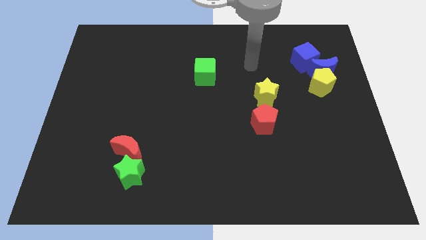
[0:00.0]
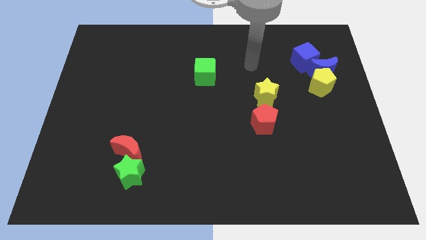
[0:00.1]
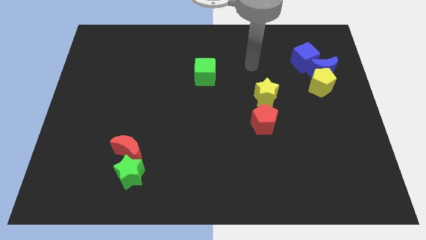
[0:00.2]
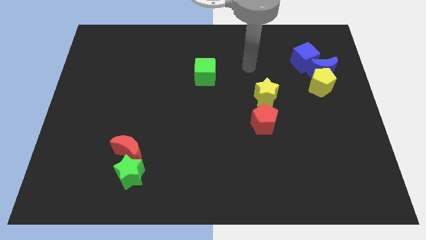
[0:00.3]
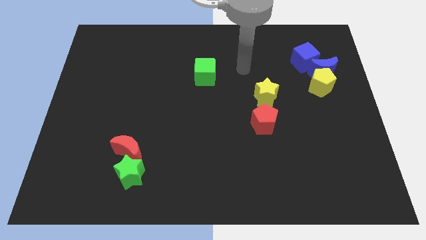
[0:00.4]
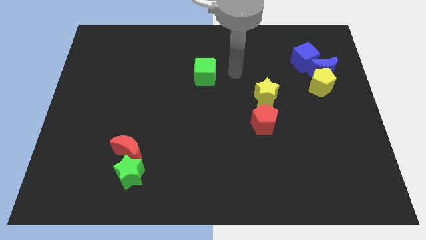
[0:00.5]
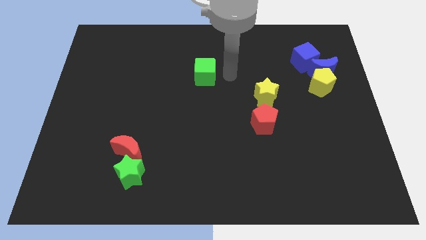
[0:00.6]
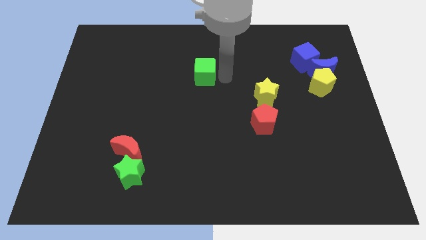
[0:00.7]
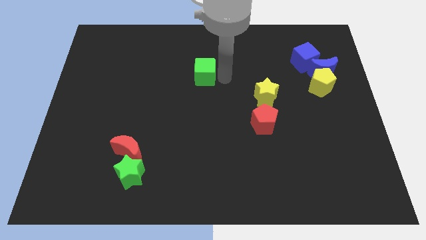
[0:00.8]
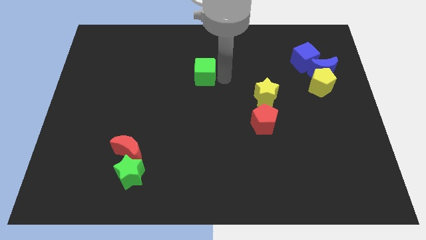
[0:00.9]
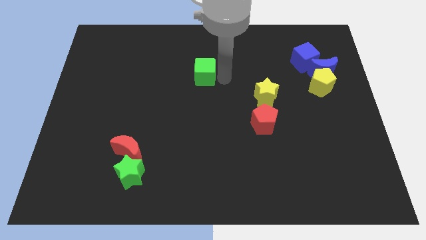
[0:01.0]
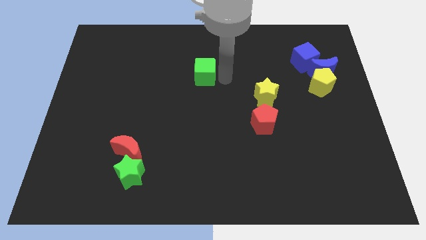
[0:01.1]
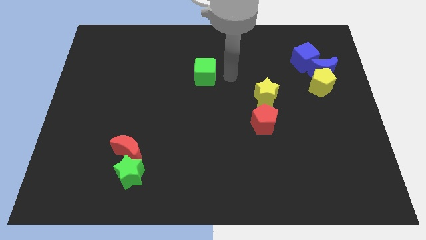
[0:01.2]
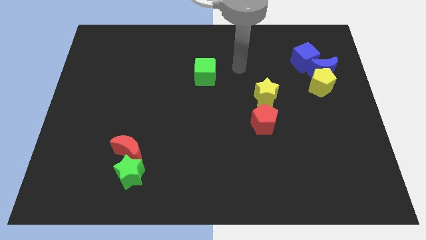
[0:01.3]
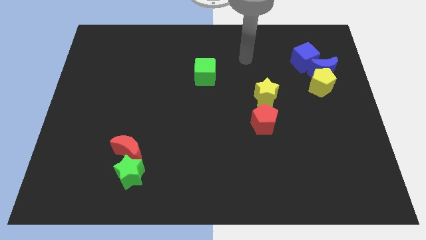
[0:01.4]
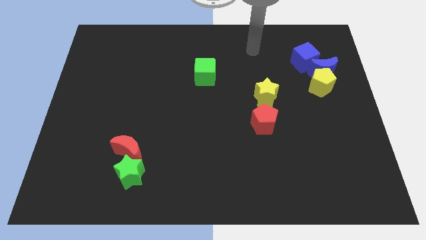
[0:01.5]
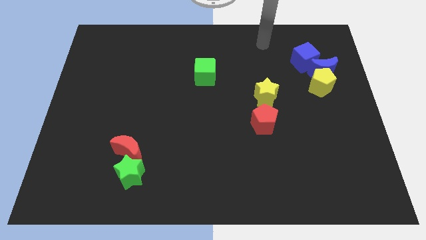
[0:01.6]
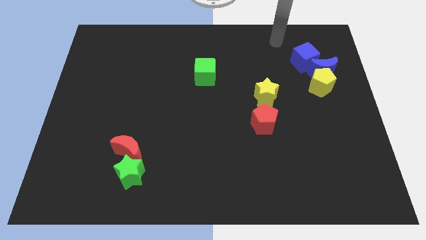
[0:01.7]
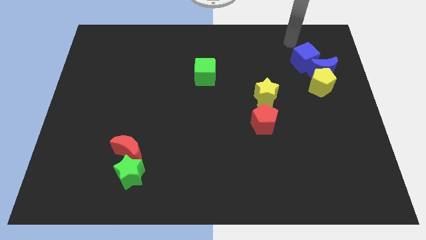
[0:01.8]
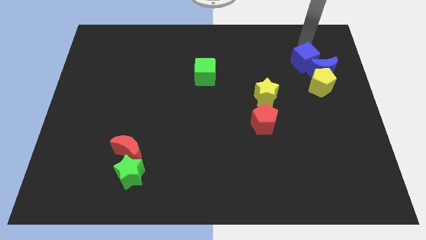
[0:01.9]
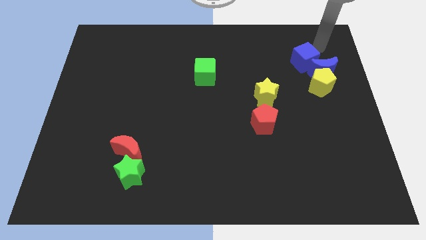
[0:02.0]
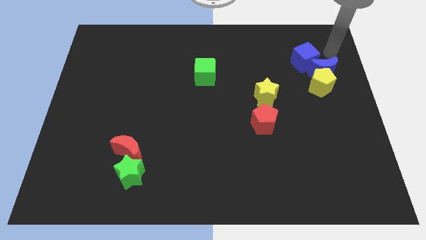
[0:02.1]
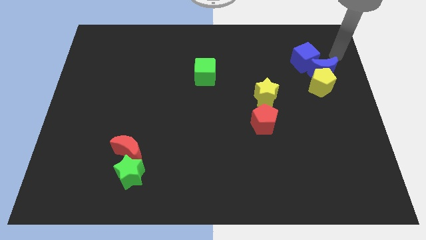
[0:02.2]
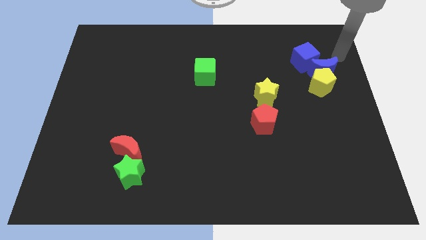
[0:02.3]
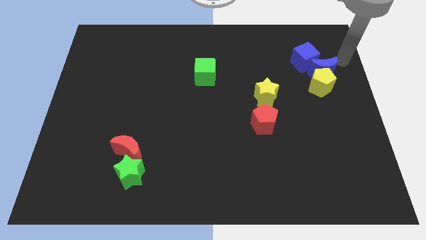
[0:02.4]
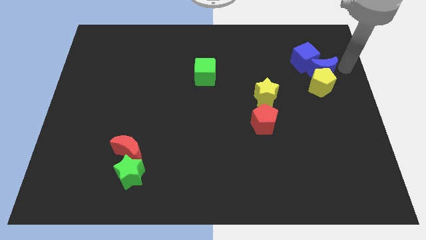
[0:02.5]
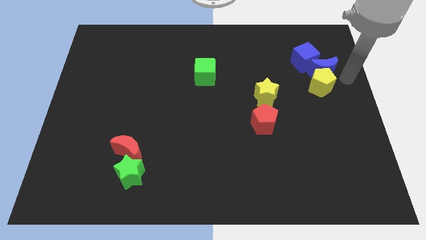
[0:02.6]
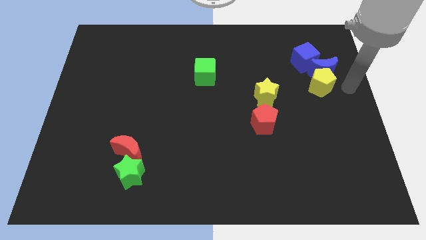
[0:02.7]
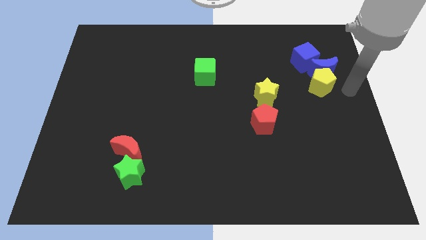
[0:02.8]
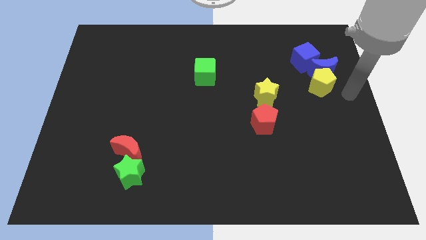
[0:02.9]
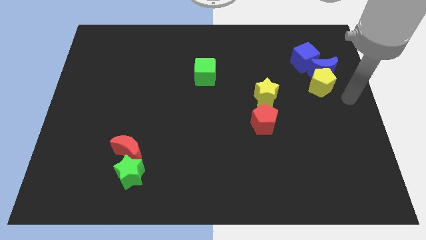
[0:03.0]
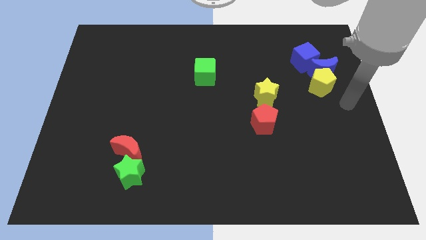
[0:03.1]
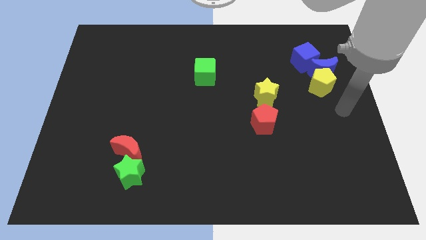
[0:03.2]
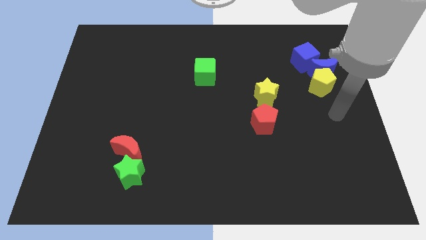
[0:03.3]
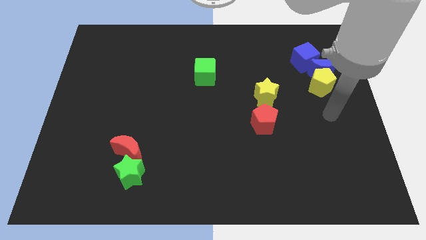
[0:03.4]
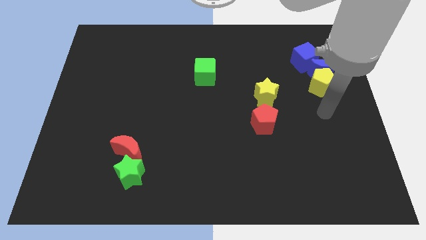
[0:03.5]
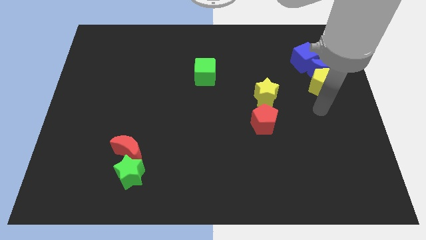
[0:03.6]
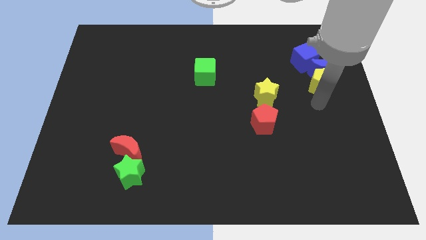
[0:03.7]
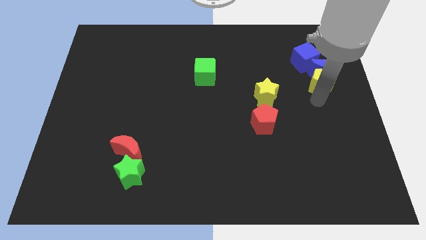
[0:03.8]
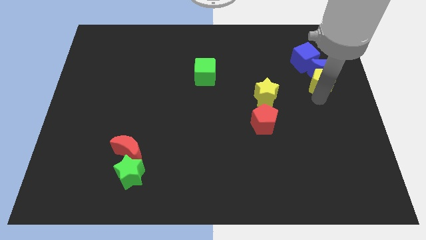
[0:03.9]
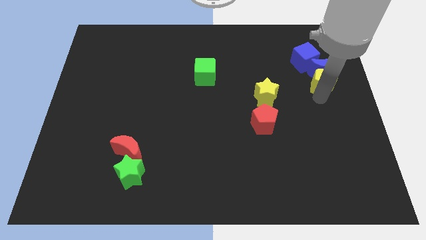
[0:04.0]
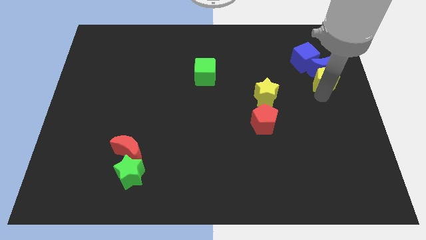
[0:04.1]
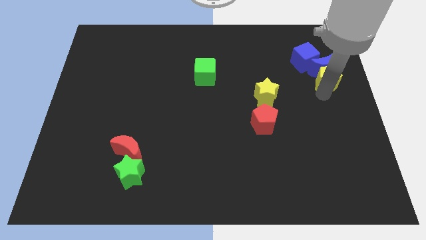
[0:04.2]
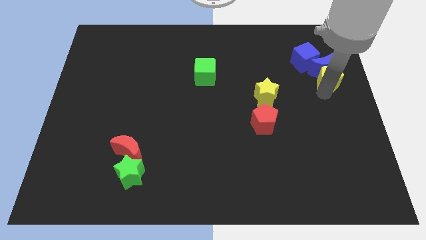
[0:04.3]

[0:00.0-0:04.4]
move the yellow pentagon below the blue crescent

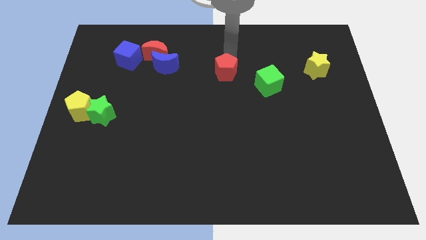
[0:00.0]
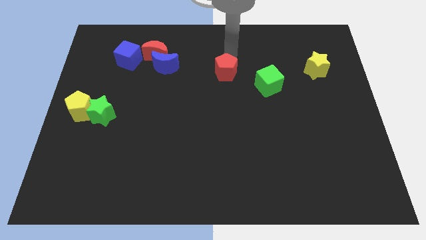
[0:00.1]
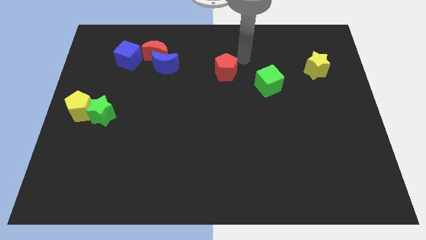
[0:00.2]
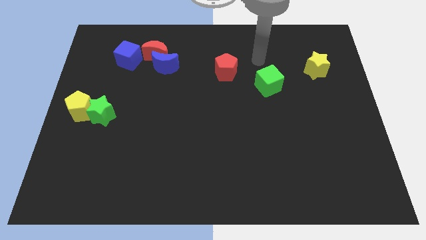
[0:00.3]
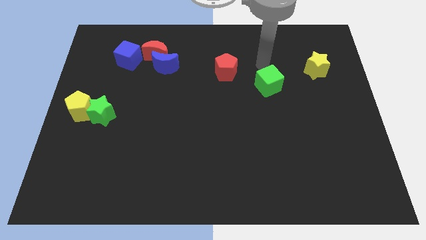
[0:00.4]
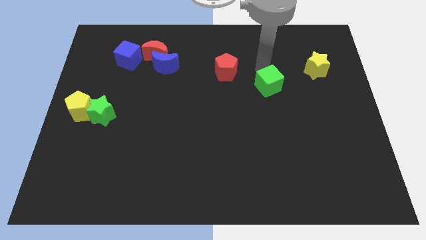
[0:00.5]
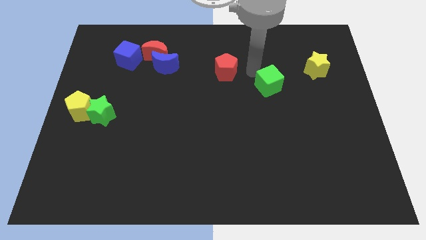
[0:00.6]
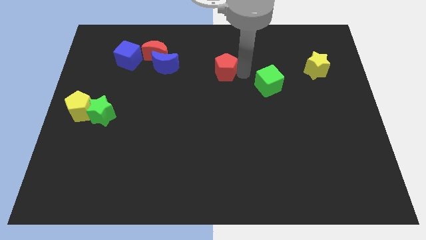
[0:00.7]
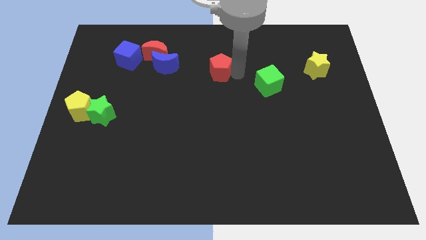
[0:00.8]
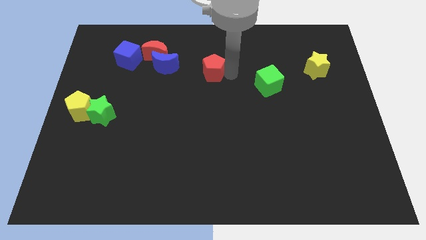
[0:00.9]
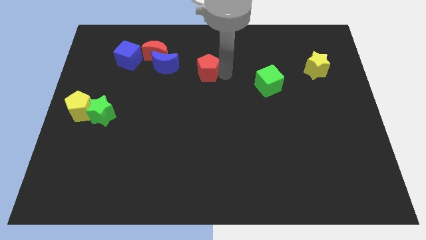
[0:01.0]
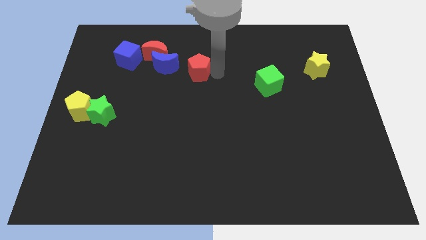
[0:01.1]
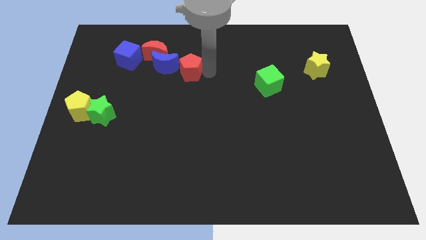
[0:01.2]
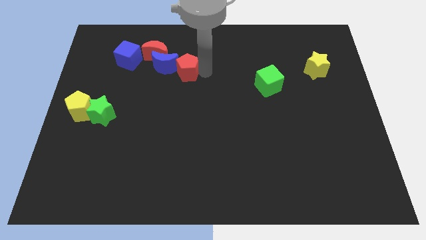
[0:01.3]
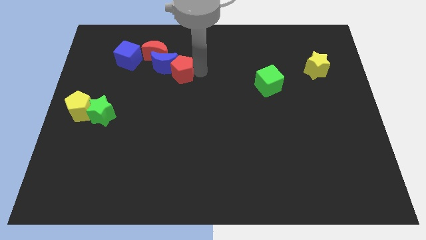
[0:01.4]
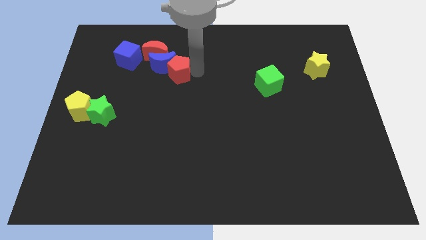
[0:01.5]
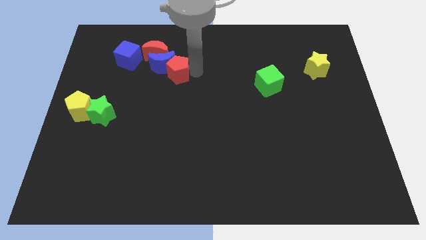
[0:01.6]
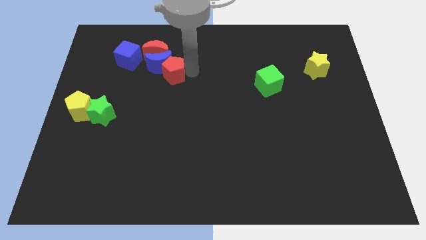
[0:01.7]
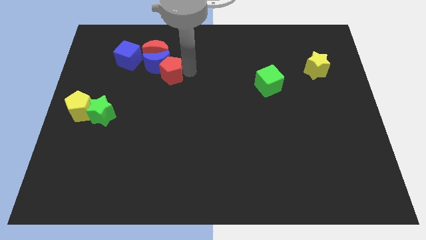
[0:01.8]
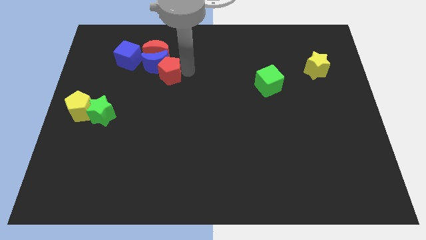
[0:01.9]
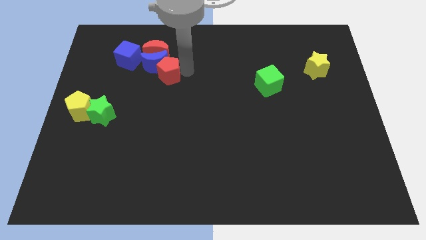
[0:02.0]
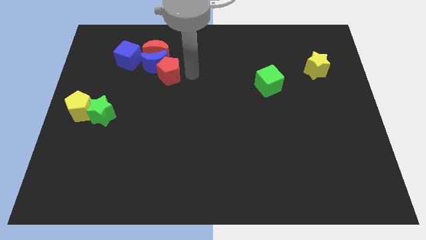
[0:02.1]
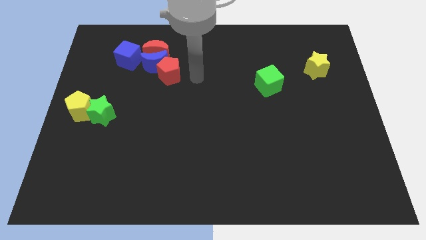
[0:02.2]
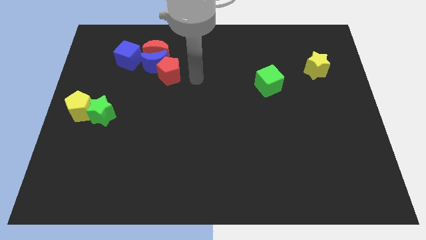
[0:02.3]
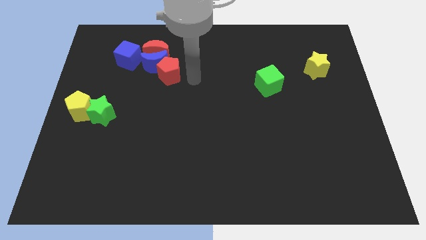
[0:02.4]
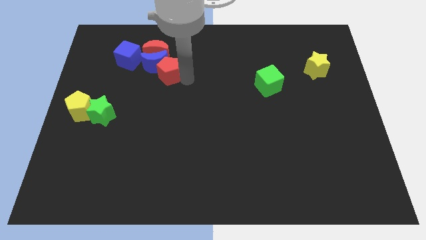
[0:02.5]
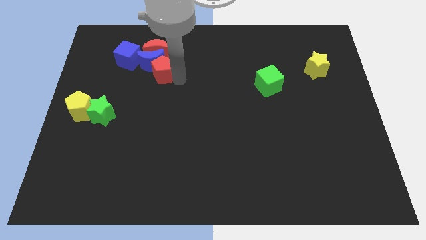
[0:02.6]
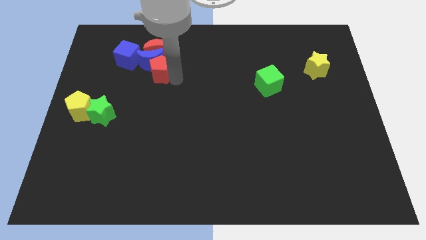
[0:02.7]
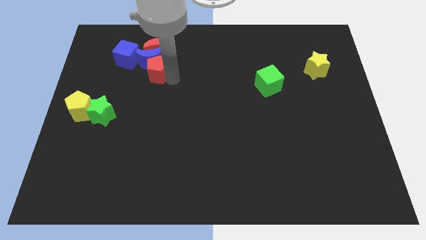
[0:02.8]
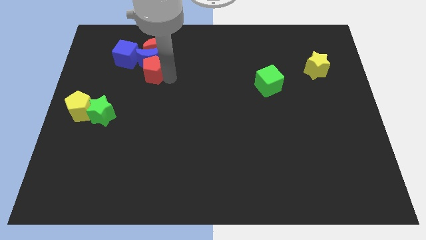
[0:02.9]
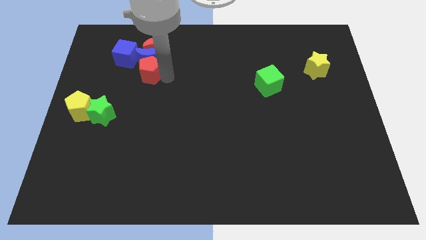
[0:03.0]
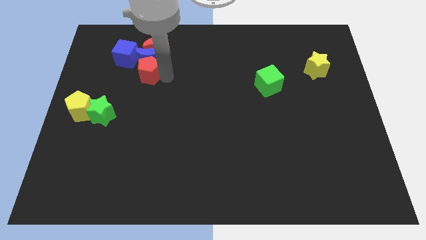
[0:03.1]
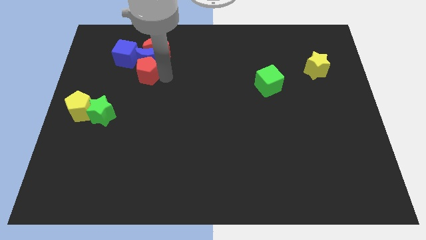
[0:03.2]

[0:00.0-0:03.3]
push red pentagon in to blue moon

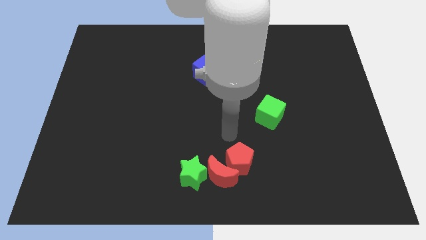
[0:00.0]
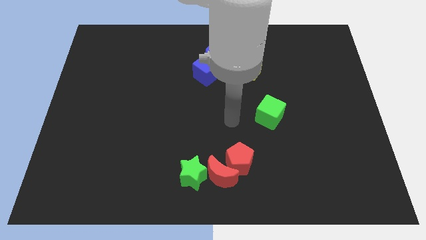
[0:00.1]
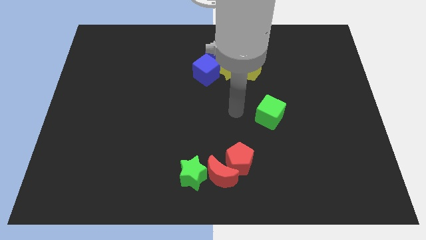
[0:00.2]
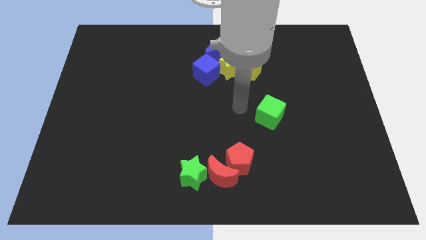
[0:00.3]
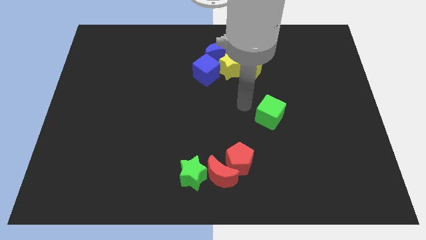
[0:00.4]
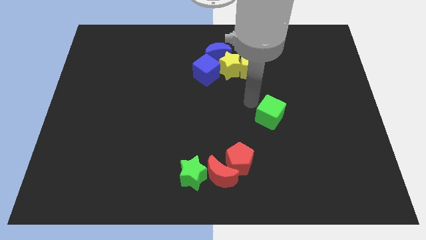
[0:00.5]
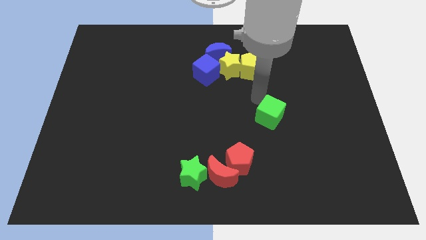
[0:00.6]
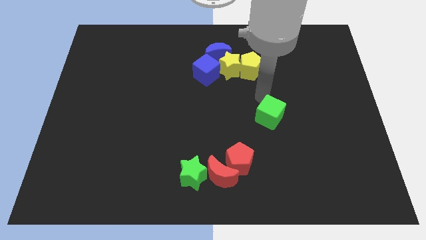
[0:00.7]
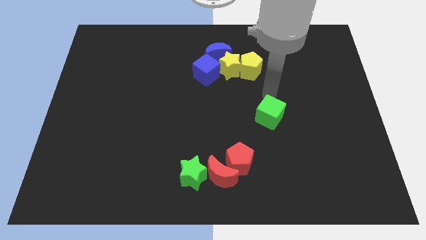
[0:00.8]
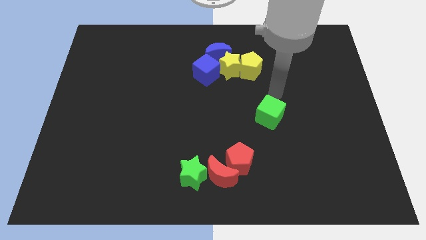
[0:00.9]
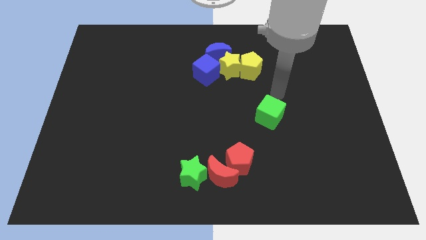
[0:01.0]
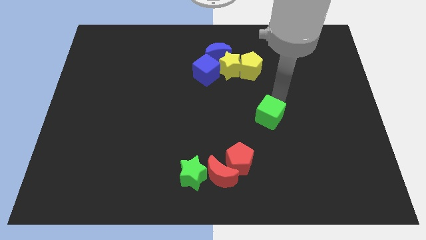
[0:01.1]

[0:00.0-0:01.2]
place your hand close to the green cube
